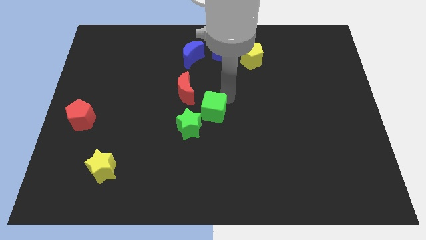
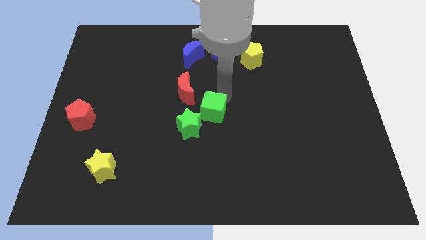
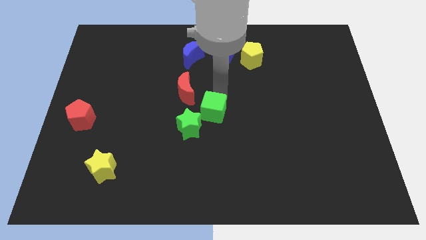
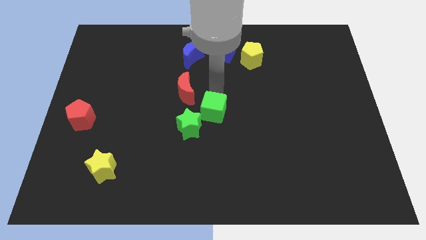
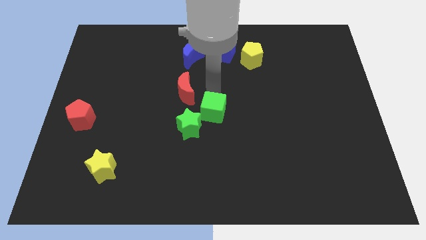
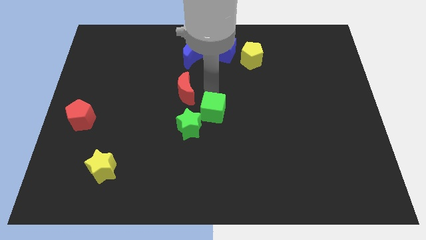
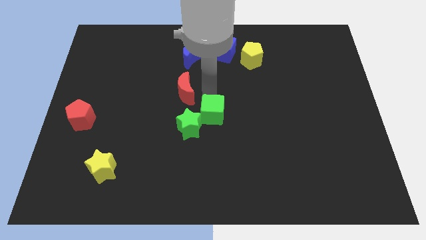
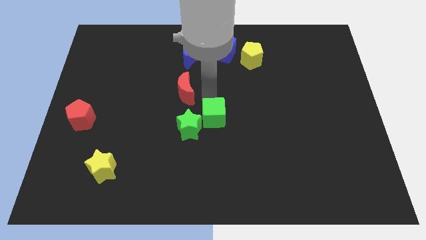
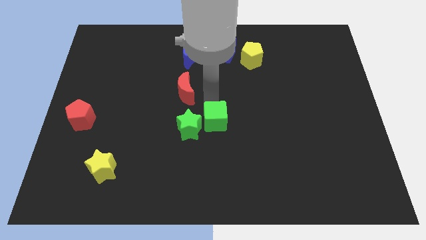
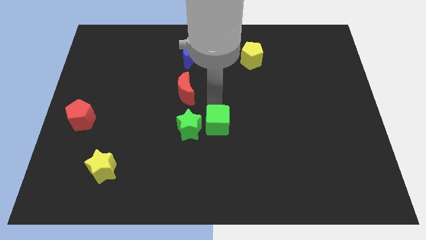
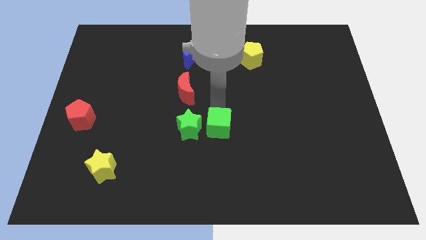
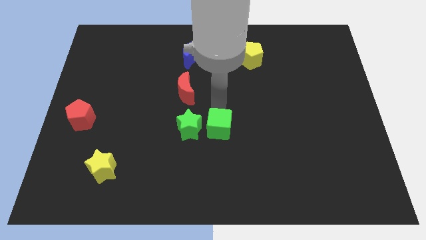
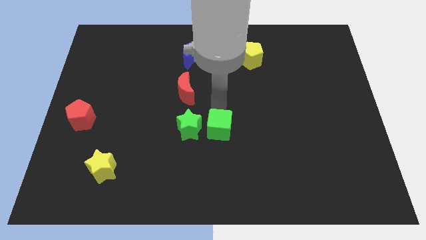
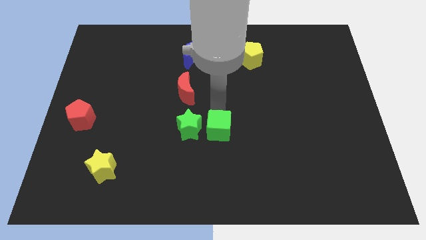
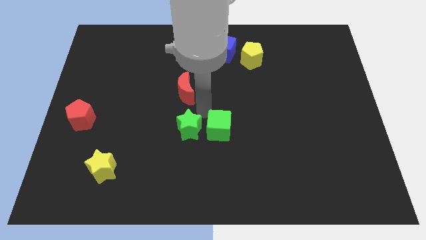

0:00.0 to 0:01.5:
push the green cube to the right of the green star

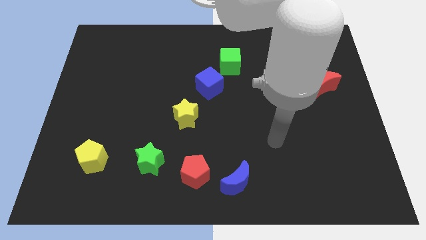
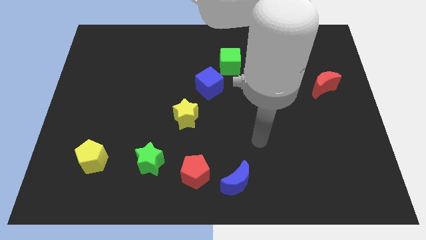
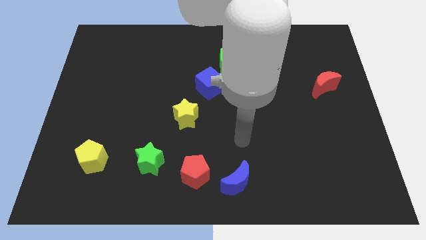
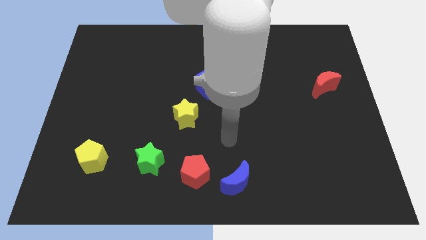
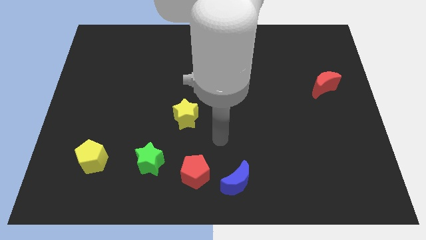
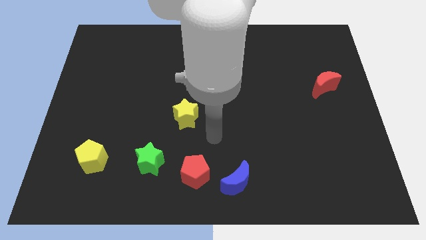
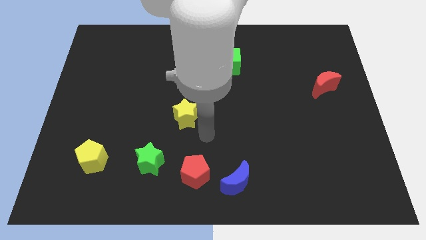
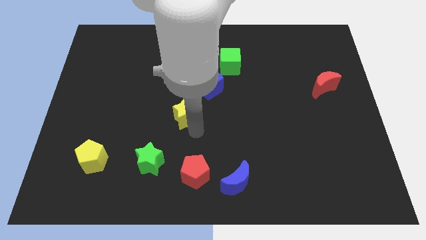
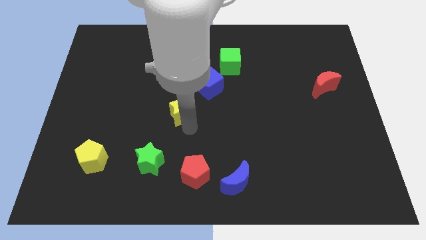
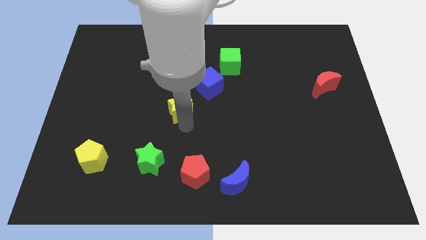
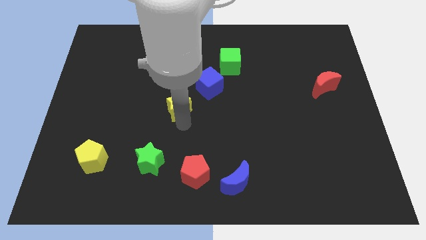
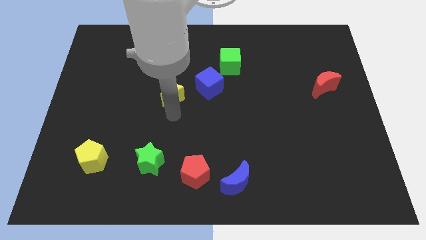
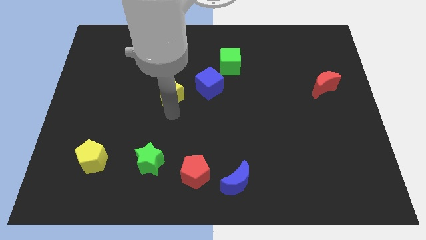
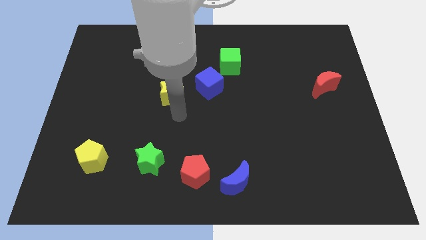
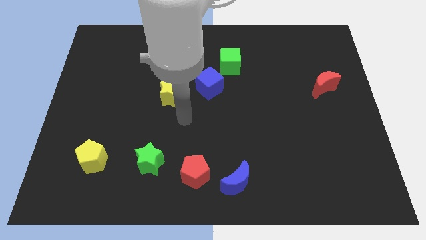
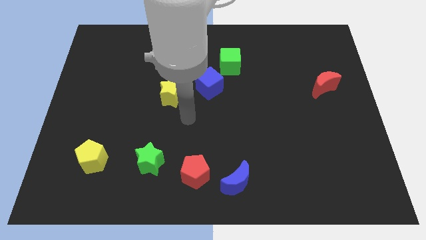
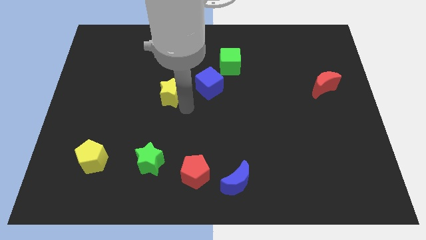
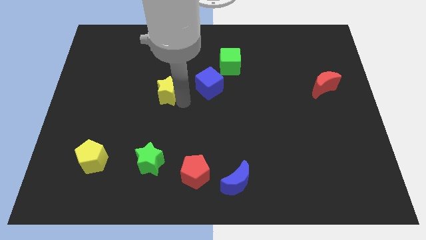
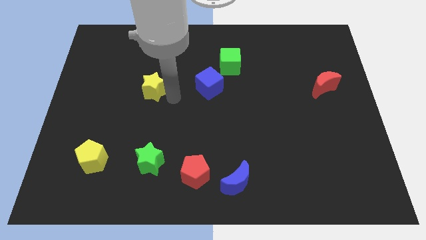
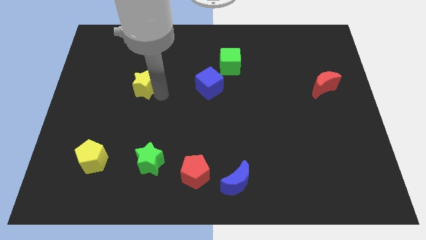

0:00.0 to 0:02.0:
place the yellow star above the green star

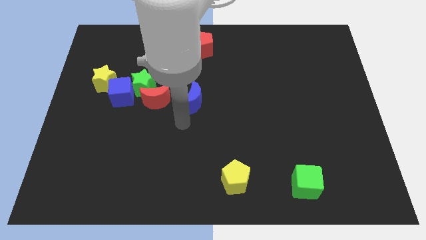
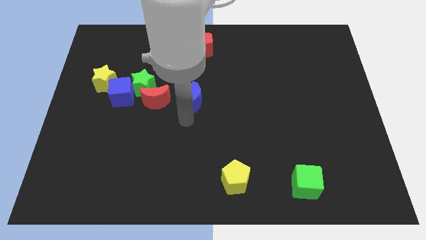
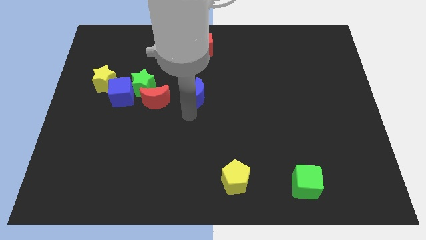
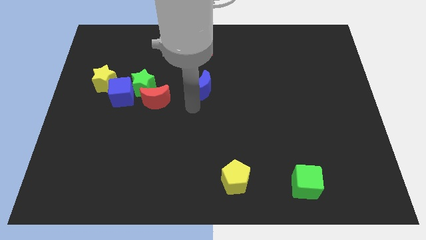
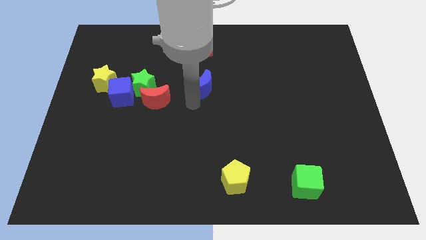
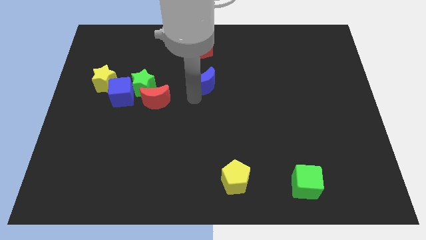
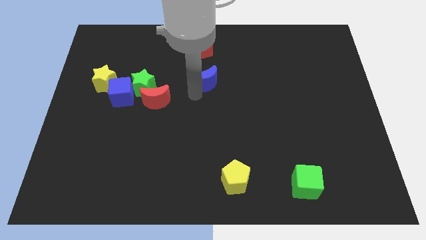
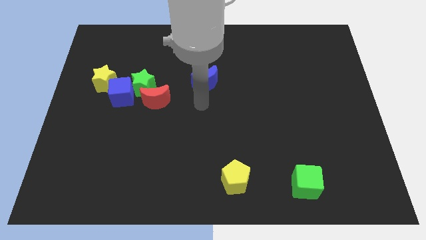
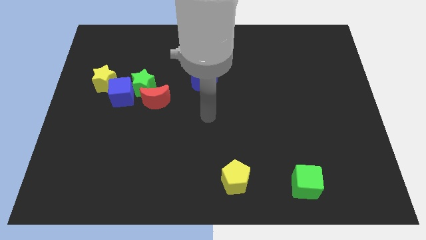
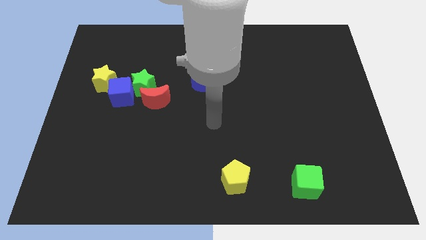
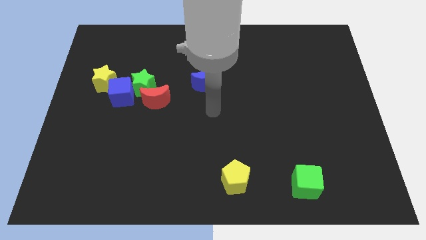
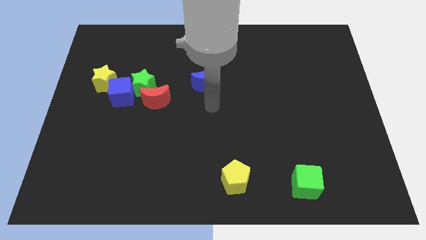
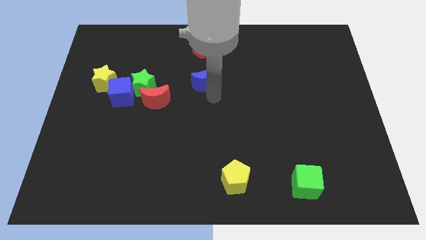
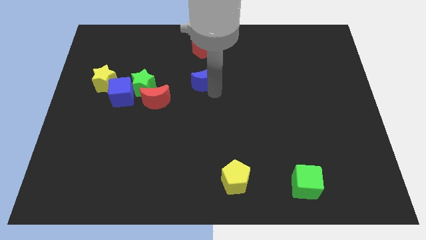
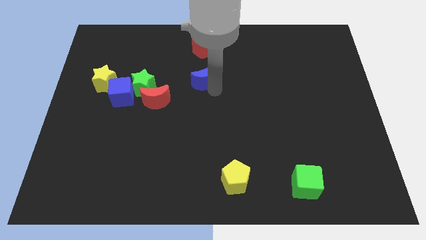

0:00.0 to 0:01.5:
push the blue crescent towards red pentagon

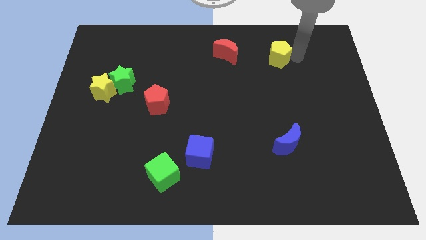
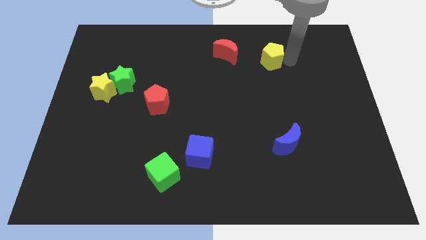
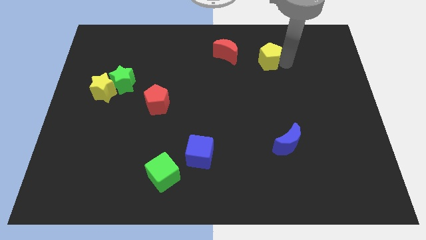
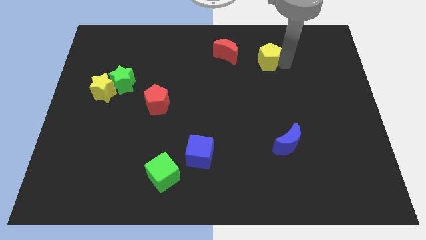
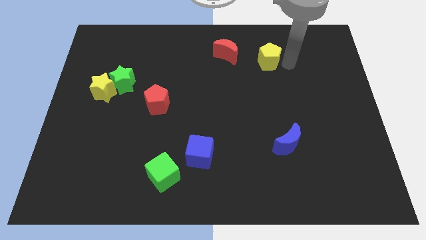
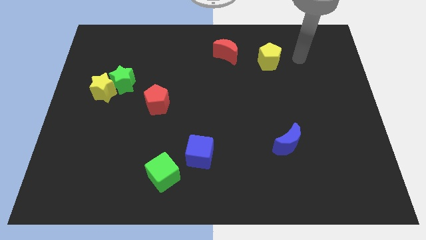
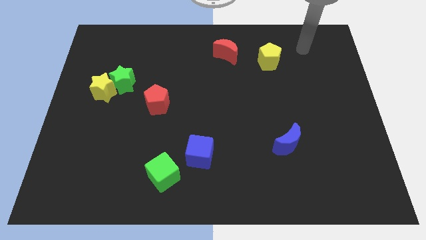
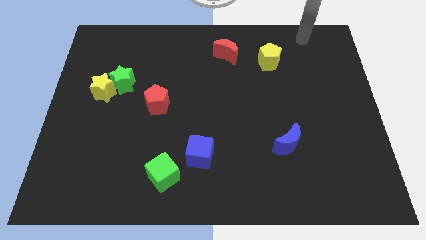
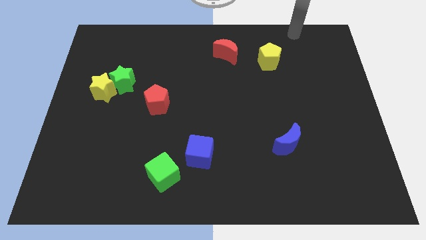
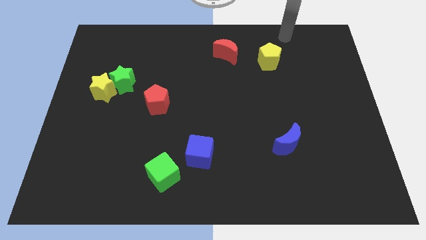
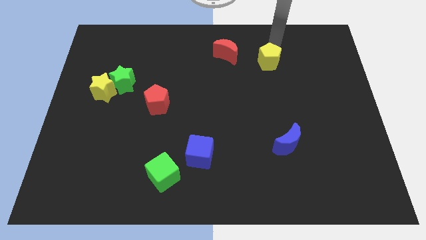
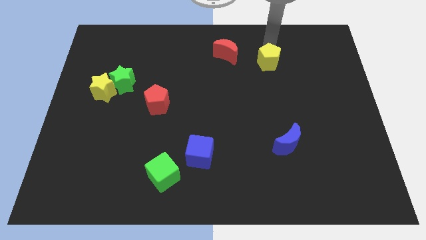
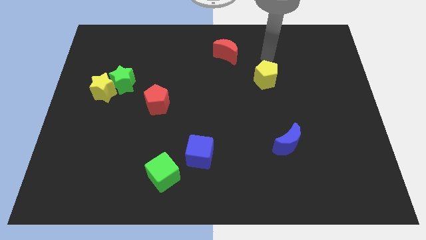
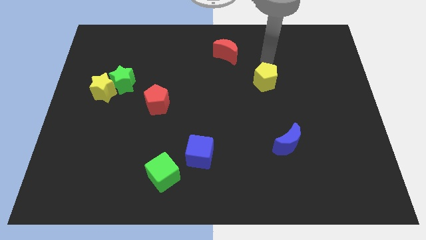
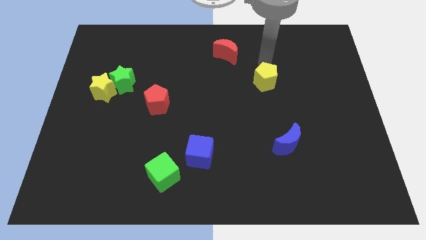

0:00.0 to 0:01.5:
place the yellow pentagon to the right of the green star

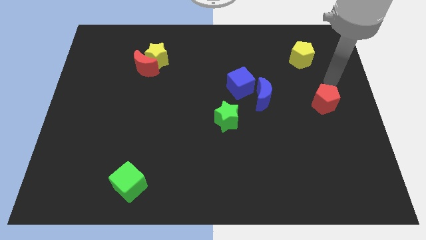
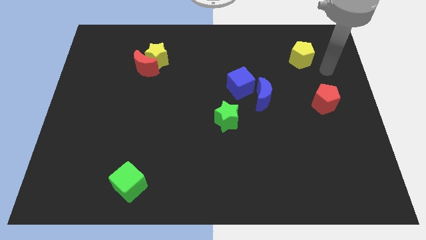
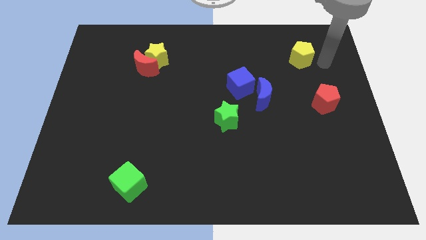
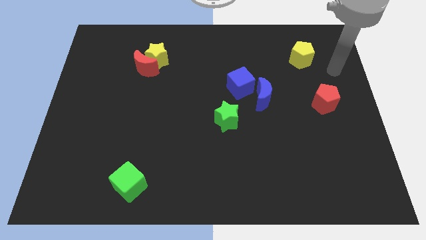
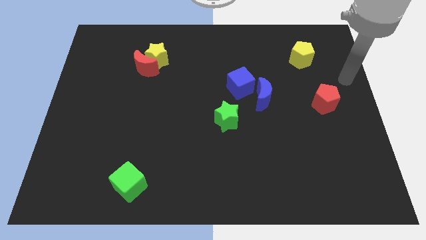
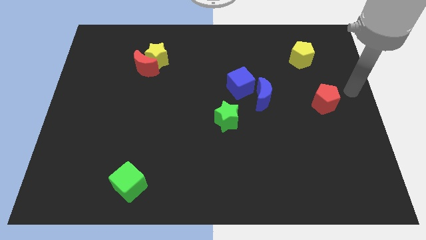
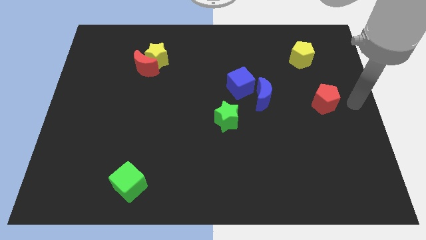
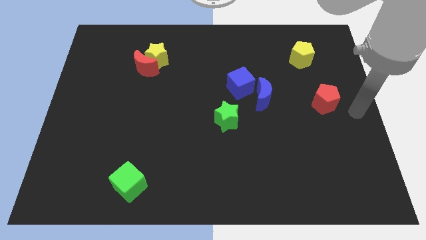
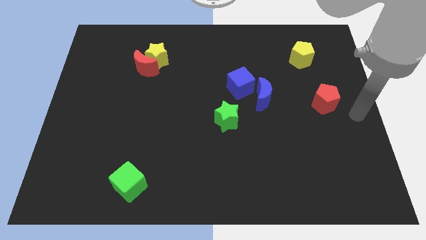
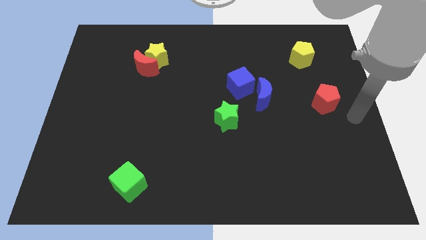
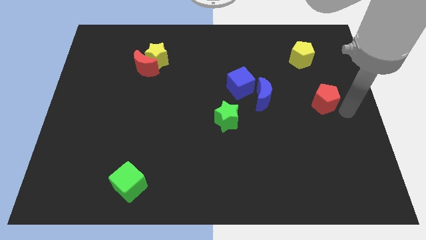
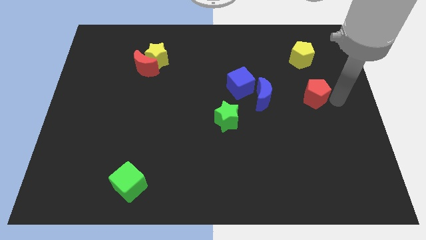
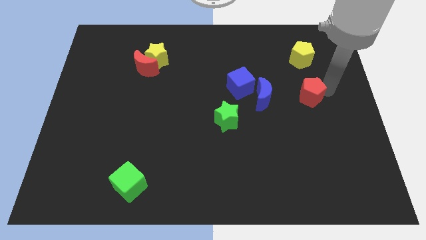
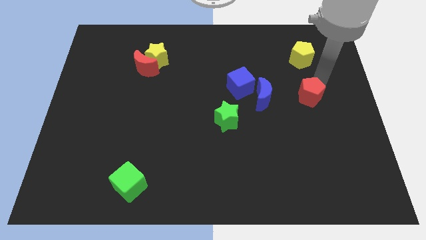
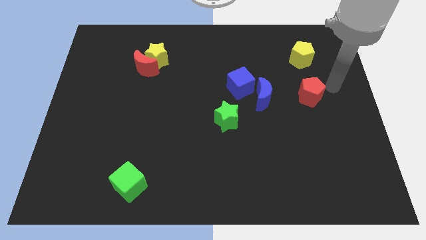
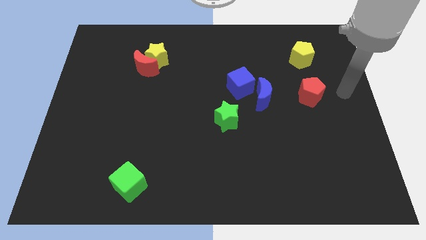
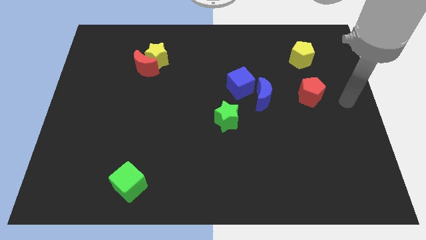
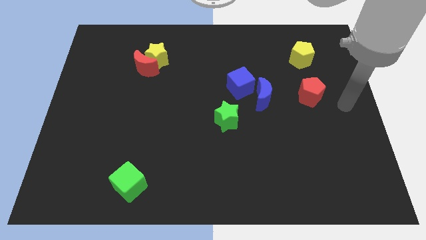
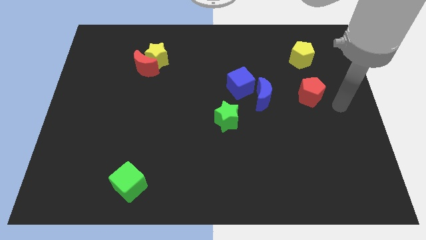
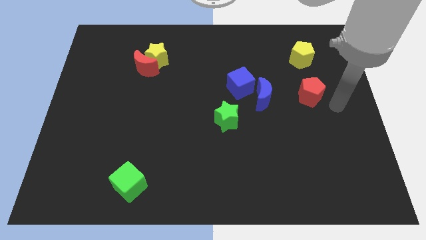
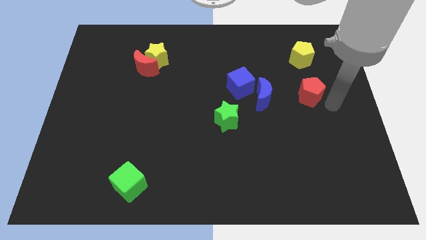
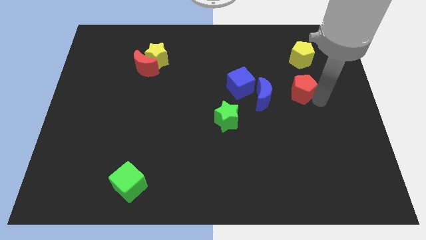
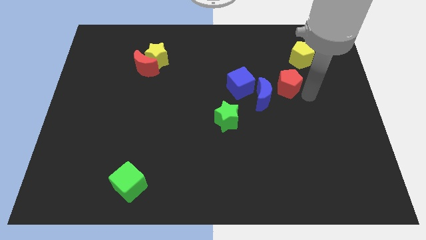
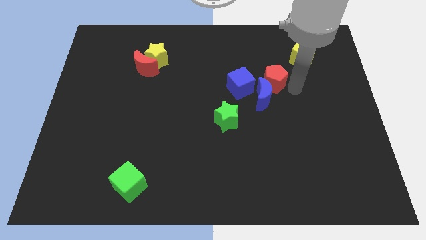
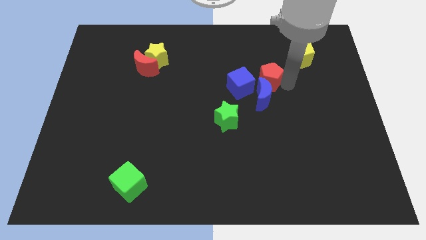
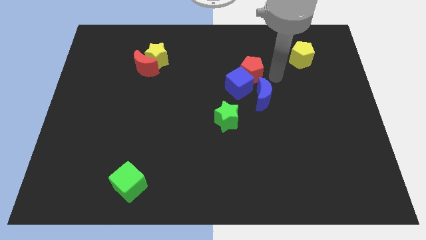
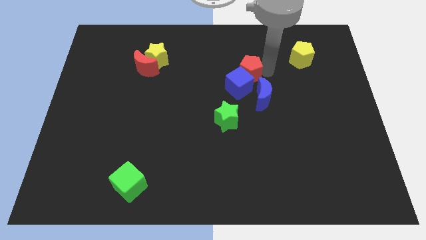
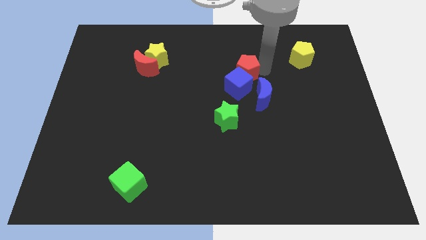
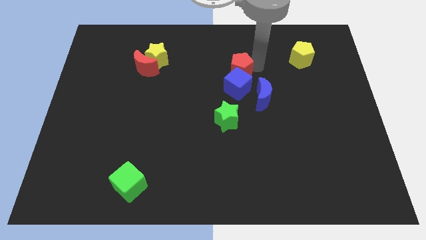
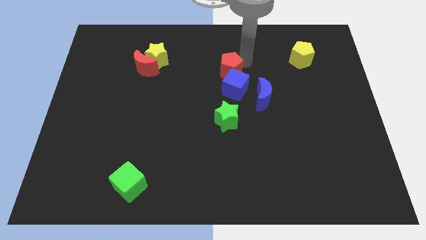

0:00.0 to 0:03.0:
put the red pentagon at the top of the blue cube
